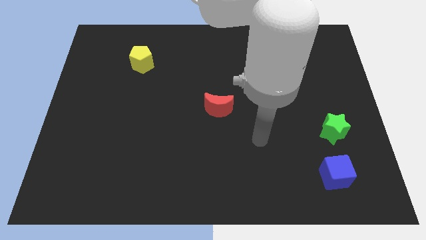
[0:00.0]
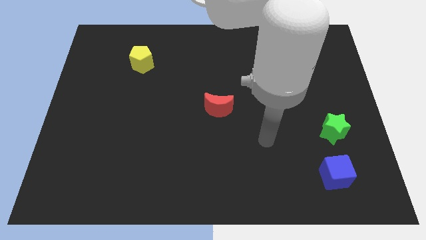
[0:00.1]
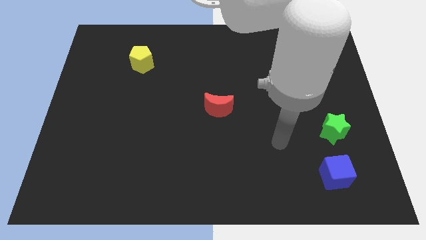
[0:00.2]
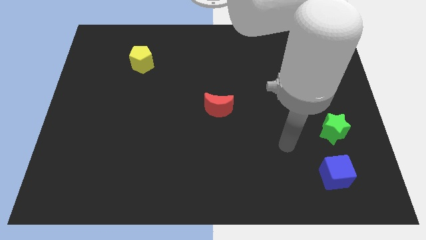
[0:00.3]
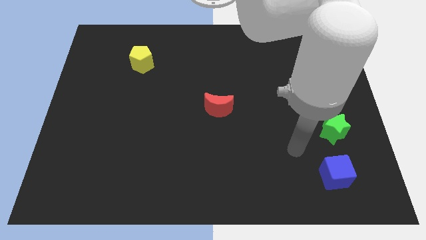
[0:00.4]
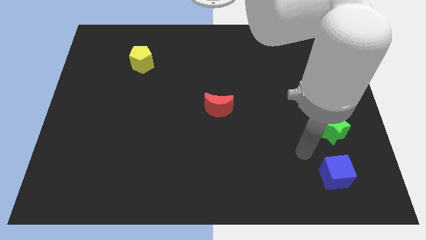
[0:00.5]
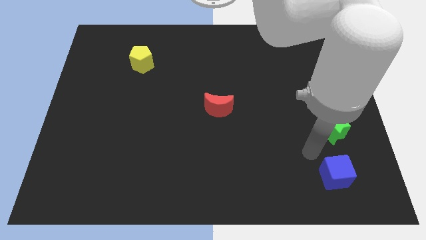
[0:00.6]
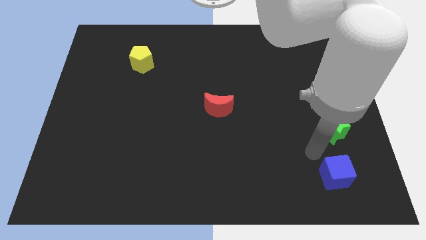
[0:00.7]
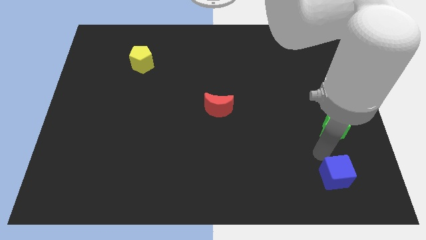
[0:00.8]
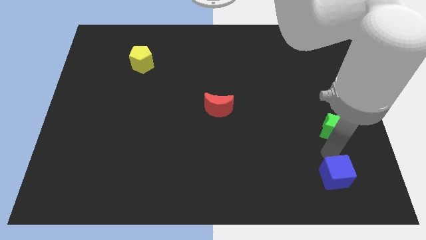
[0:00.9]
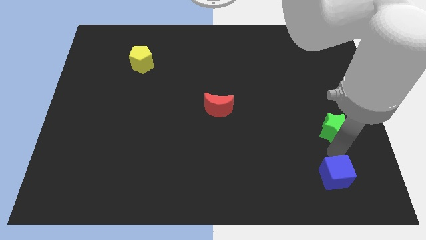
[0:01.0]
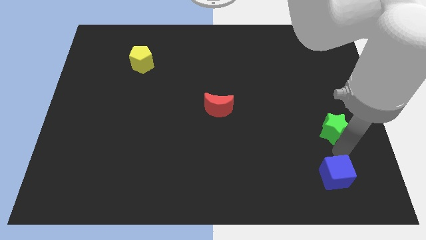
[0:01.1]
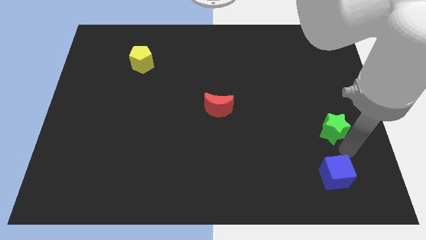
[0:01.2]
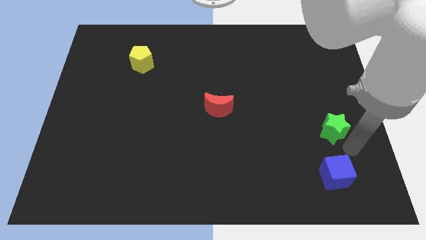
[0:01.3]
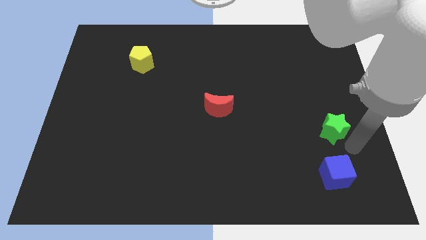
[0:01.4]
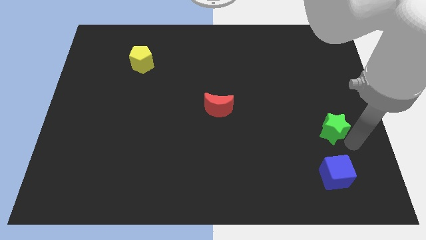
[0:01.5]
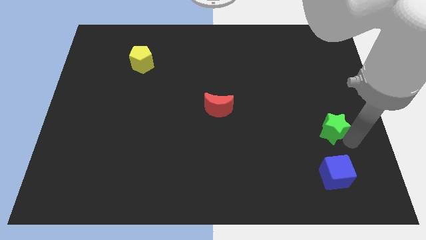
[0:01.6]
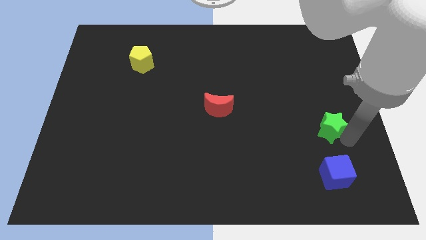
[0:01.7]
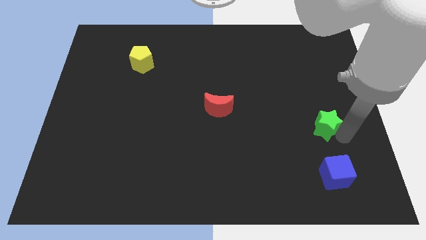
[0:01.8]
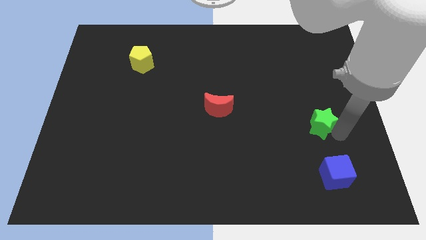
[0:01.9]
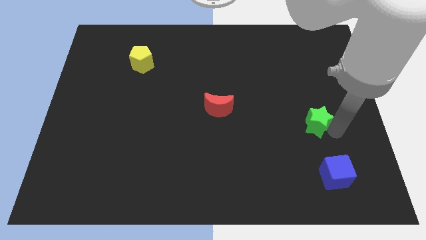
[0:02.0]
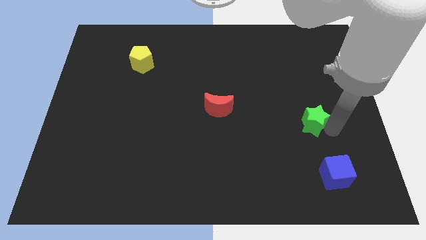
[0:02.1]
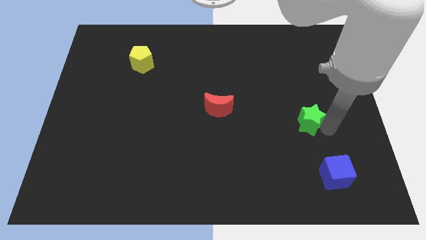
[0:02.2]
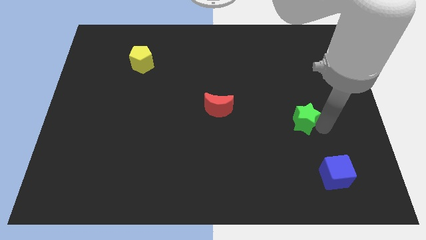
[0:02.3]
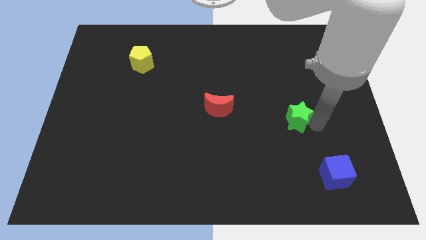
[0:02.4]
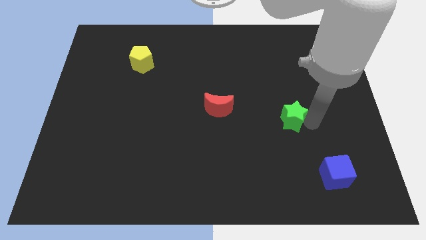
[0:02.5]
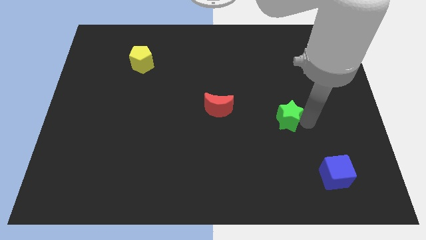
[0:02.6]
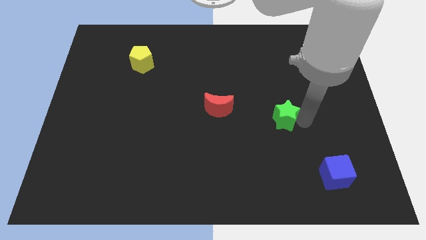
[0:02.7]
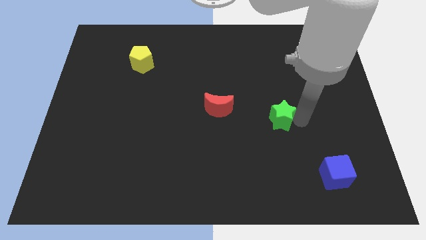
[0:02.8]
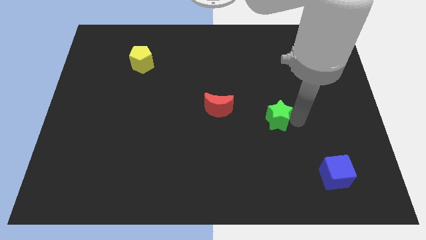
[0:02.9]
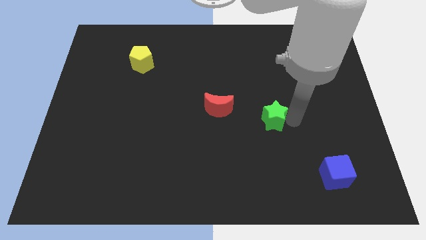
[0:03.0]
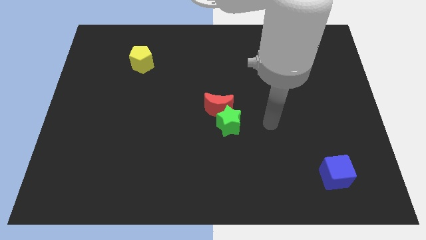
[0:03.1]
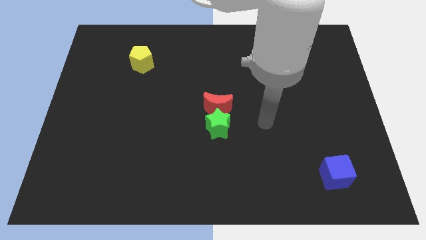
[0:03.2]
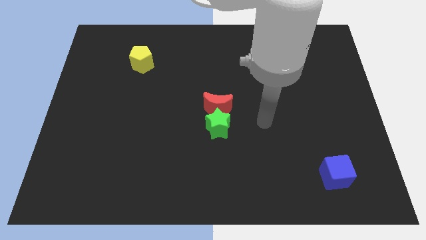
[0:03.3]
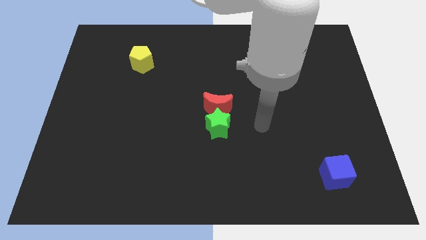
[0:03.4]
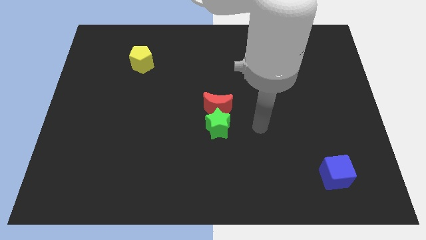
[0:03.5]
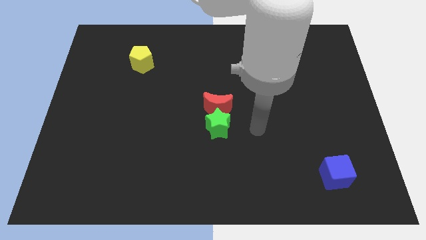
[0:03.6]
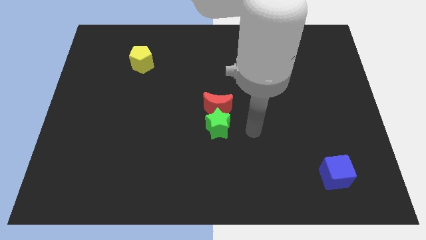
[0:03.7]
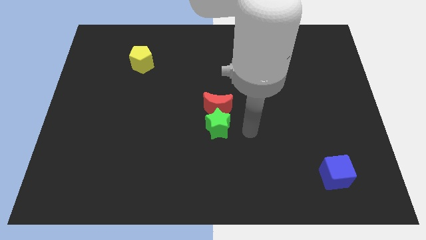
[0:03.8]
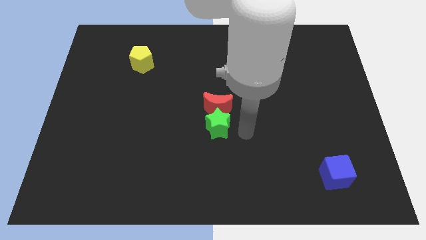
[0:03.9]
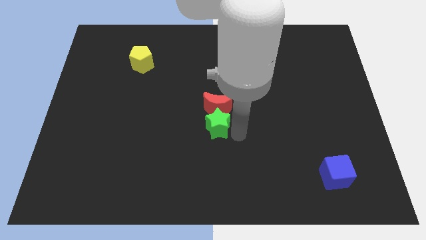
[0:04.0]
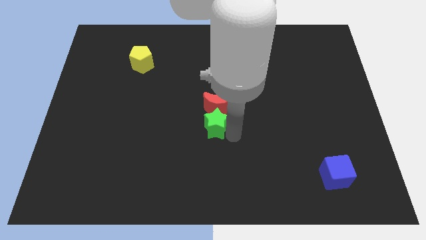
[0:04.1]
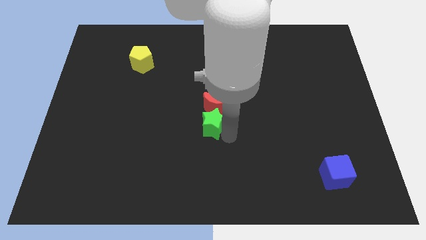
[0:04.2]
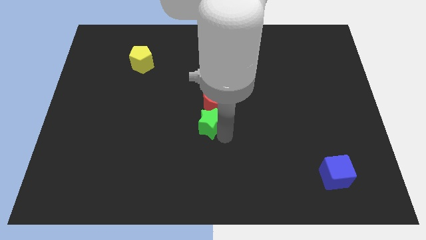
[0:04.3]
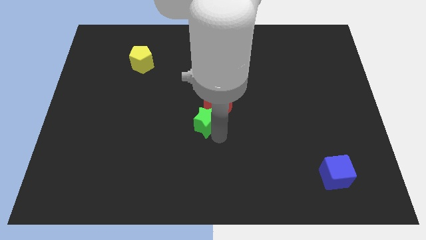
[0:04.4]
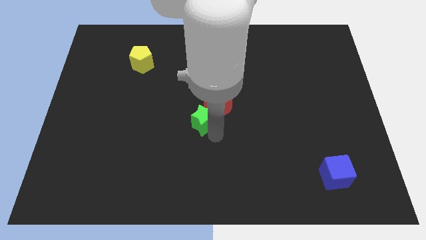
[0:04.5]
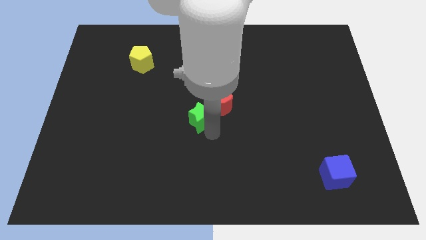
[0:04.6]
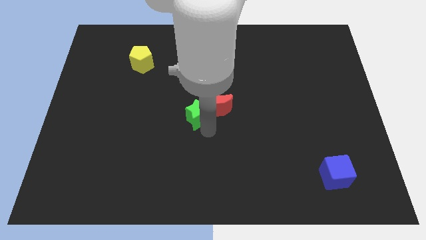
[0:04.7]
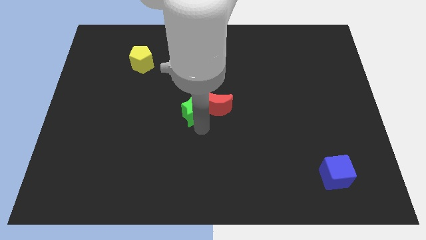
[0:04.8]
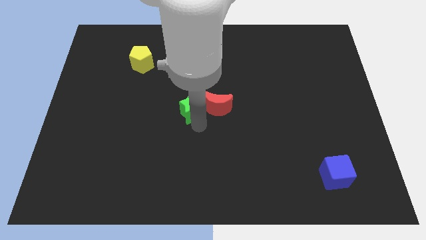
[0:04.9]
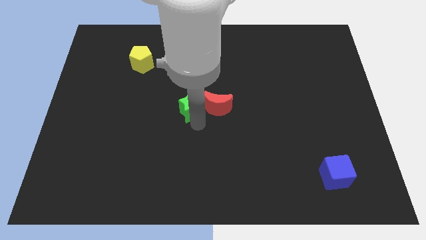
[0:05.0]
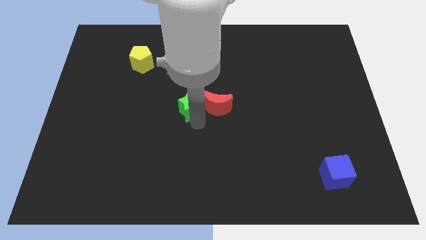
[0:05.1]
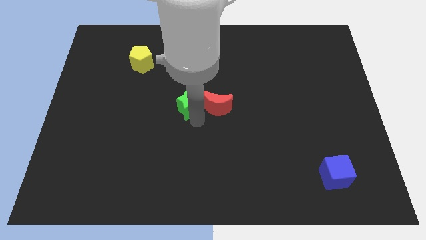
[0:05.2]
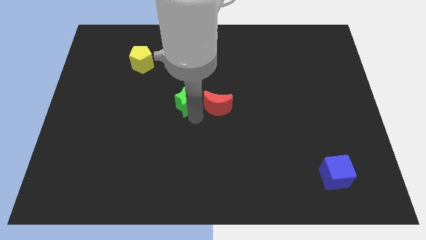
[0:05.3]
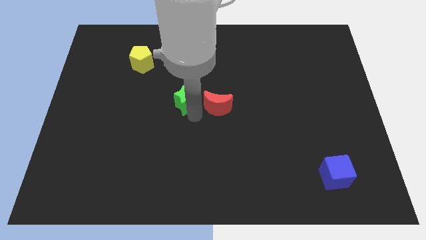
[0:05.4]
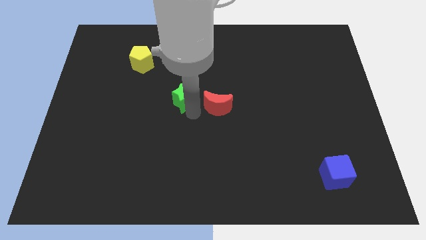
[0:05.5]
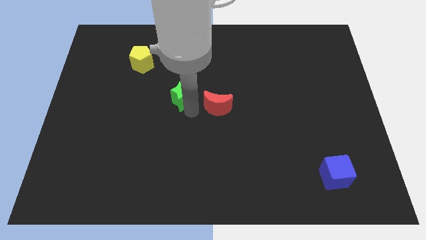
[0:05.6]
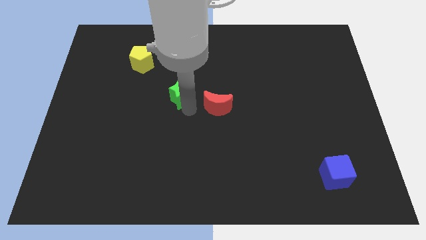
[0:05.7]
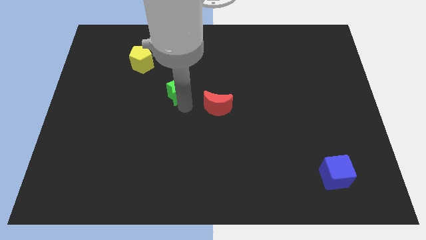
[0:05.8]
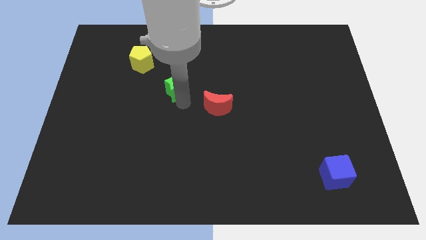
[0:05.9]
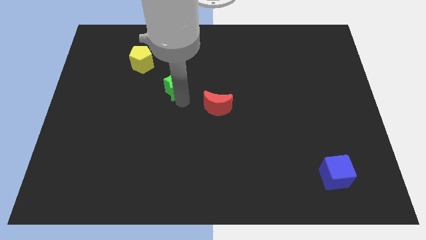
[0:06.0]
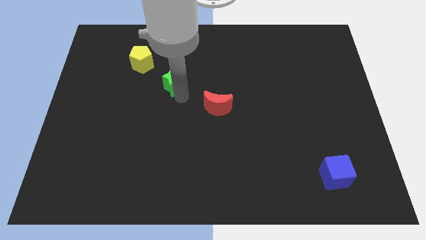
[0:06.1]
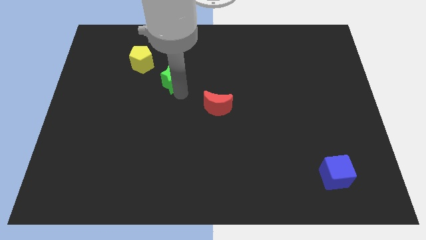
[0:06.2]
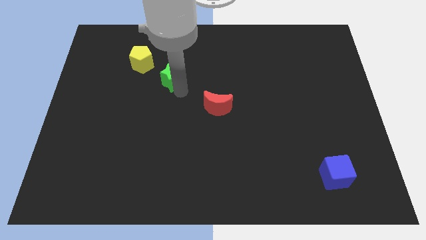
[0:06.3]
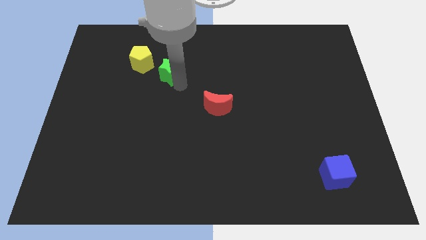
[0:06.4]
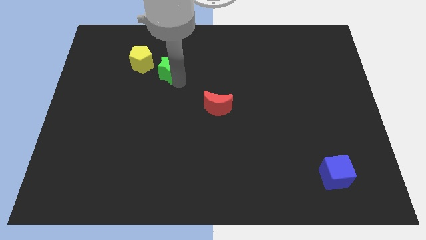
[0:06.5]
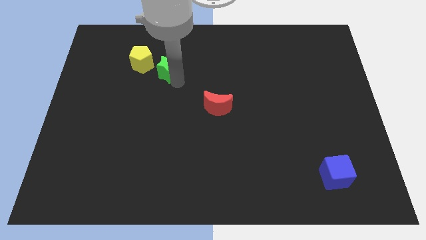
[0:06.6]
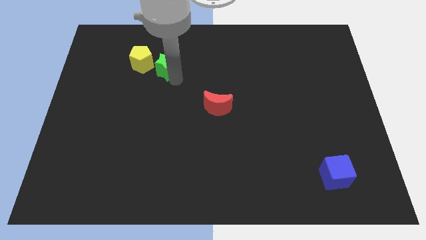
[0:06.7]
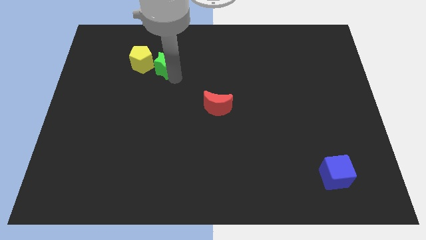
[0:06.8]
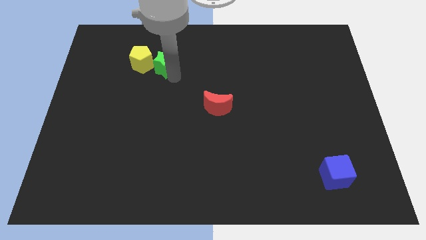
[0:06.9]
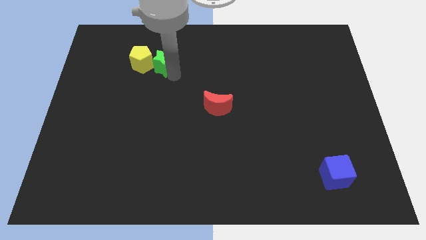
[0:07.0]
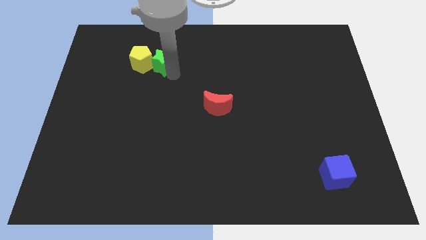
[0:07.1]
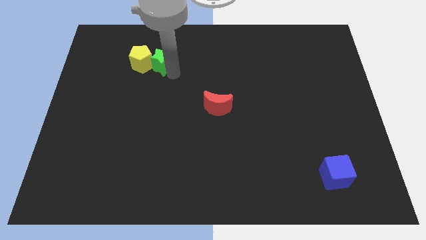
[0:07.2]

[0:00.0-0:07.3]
move the star to the pentagon

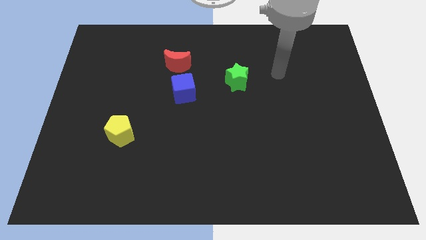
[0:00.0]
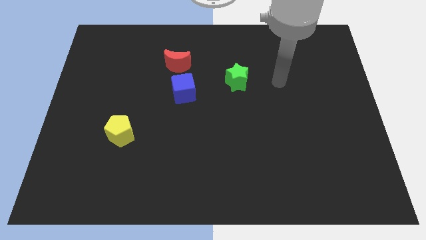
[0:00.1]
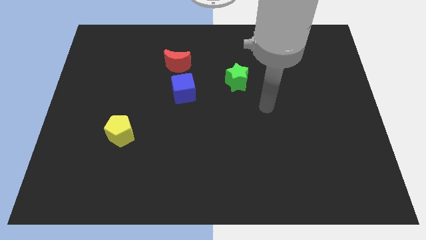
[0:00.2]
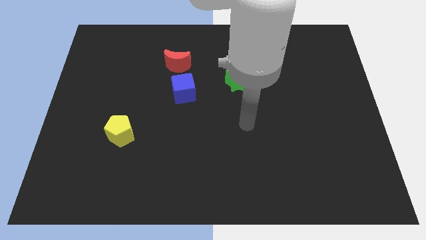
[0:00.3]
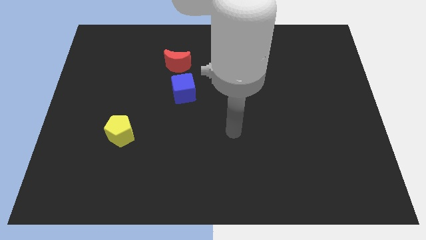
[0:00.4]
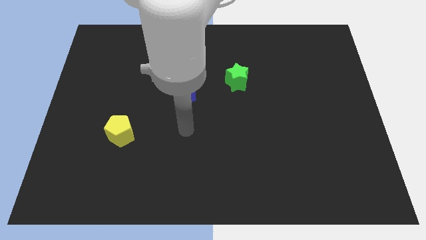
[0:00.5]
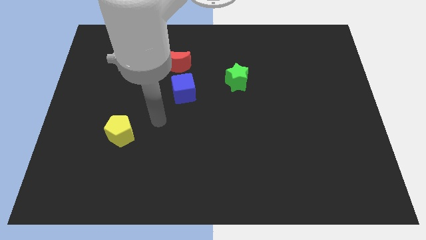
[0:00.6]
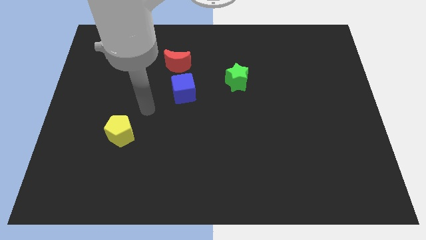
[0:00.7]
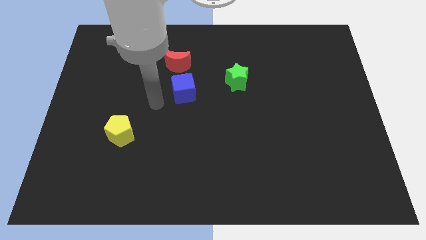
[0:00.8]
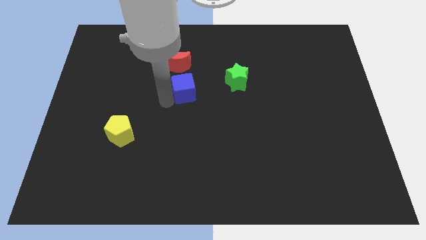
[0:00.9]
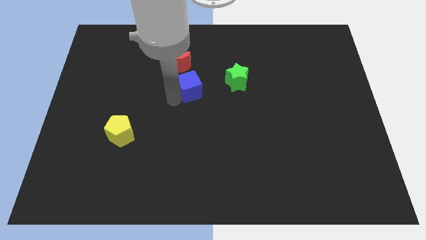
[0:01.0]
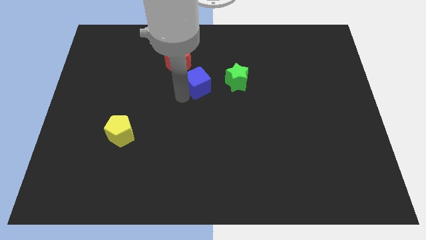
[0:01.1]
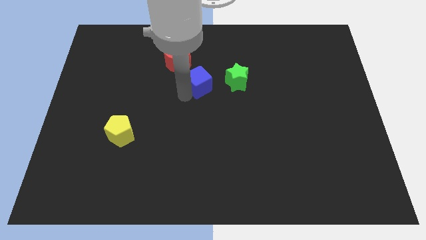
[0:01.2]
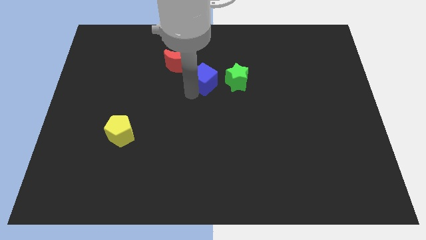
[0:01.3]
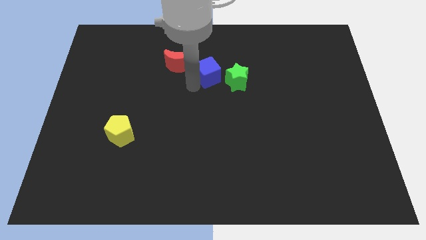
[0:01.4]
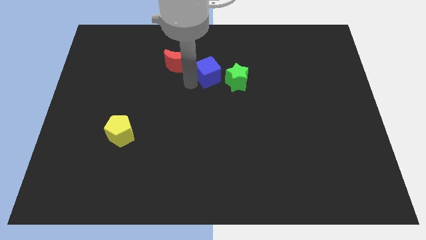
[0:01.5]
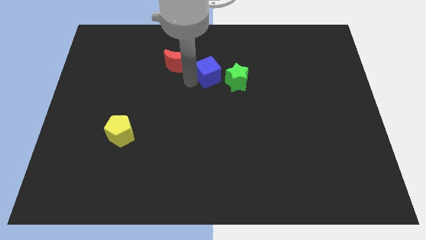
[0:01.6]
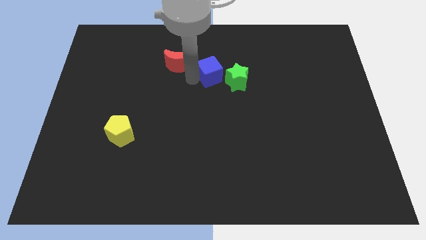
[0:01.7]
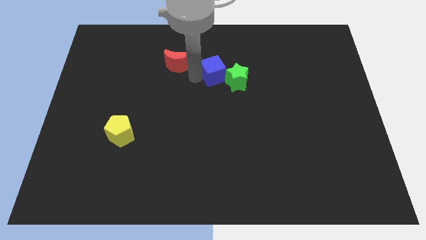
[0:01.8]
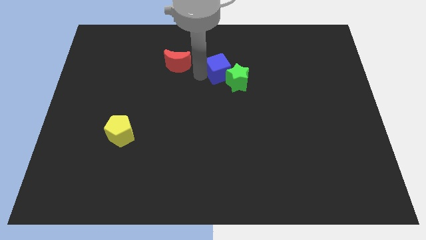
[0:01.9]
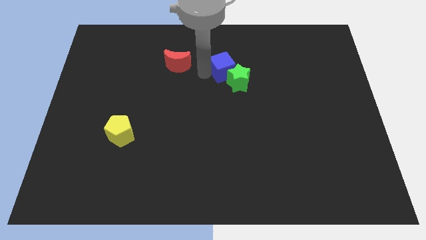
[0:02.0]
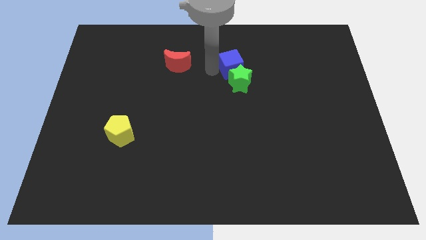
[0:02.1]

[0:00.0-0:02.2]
move the blue cube close to the star
